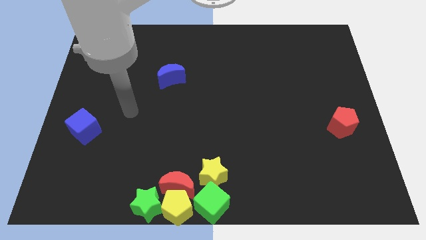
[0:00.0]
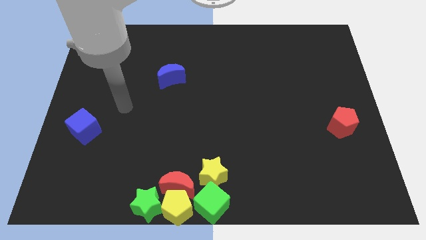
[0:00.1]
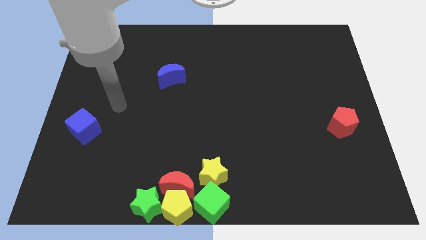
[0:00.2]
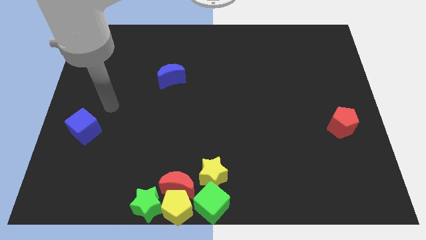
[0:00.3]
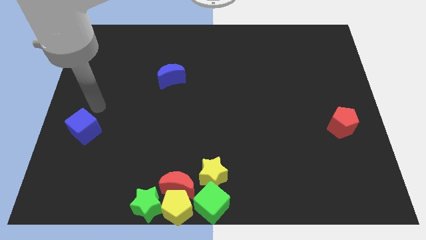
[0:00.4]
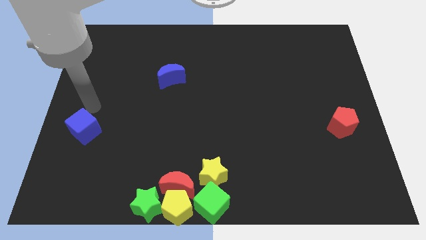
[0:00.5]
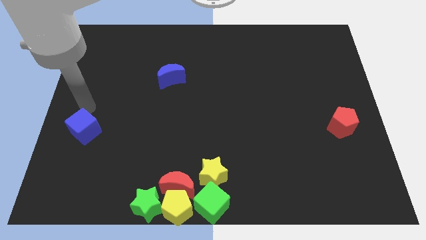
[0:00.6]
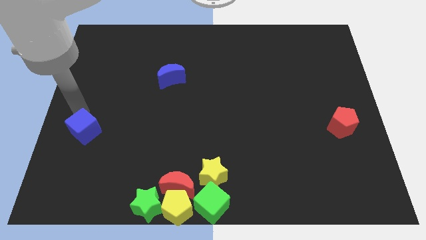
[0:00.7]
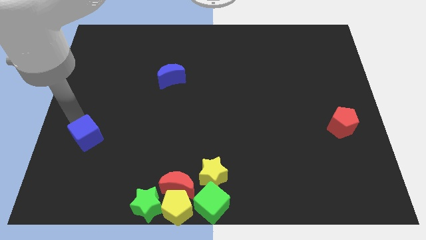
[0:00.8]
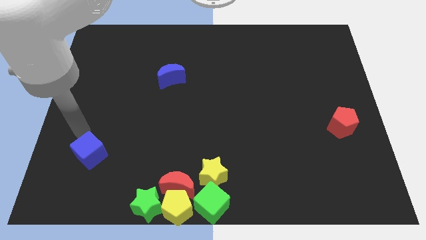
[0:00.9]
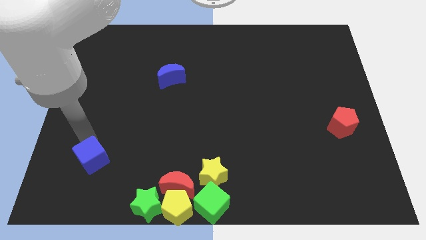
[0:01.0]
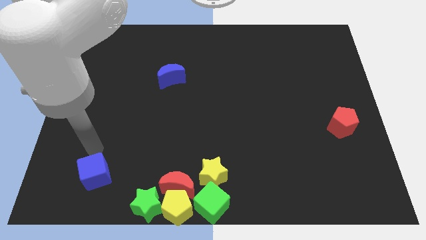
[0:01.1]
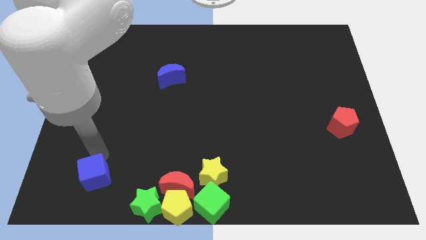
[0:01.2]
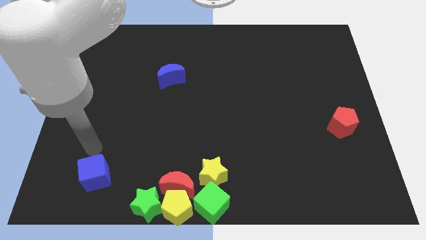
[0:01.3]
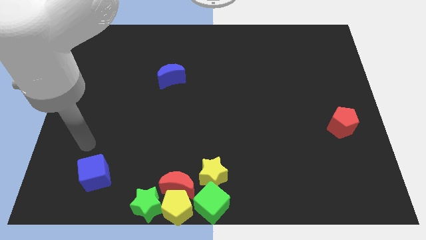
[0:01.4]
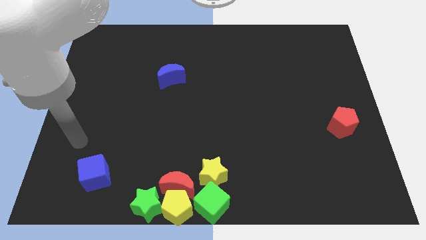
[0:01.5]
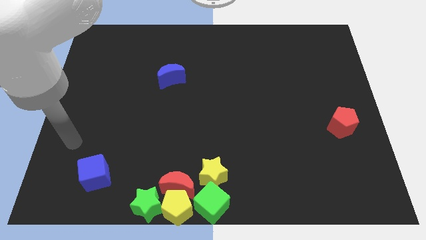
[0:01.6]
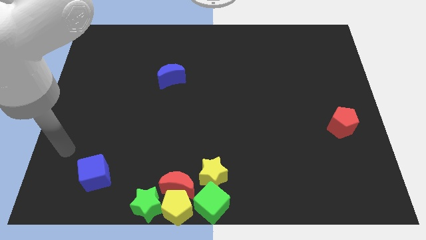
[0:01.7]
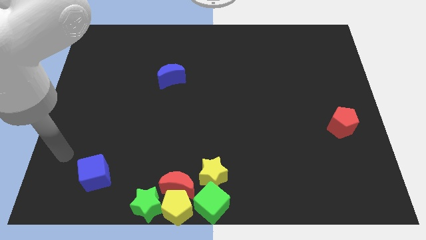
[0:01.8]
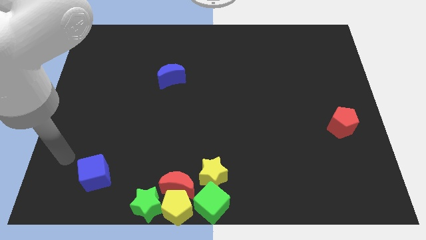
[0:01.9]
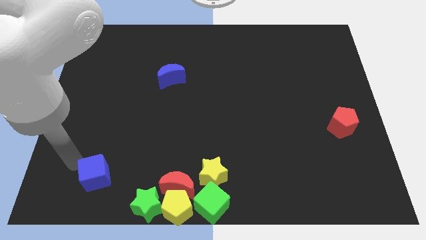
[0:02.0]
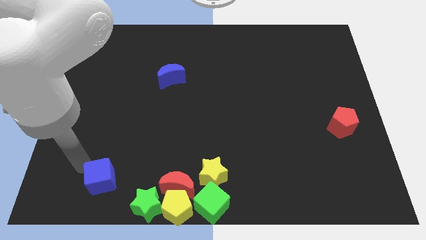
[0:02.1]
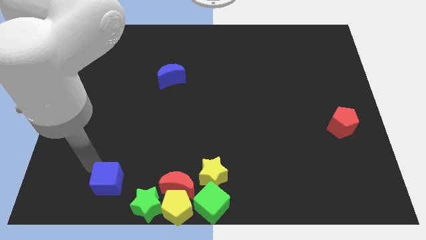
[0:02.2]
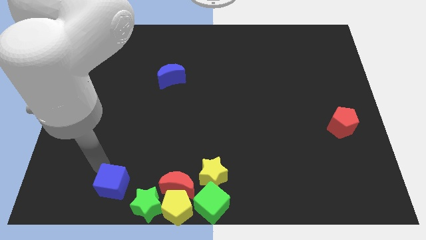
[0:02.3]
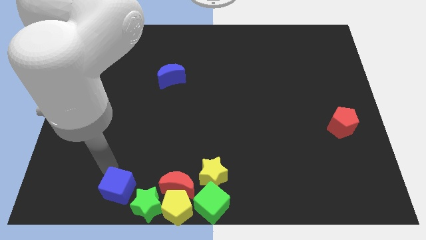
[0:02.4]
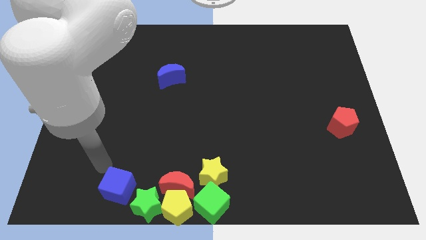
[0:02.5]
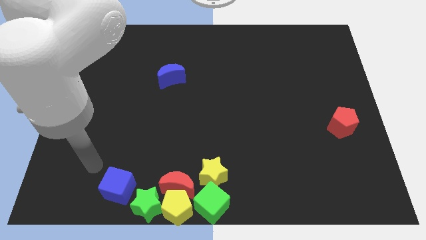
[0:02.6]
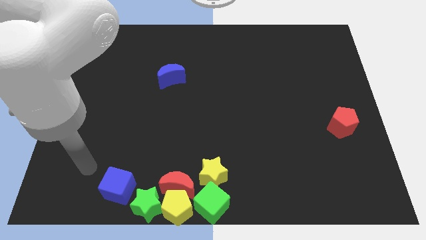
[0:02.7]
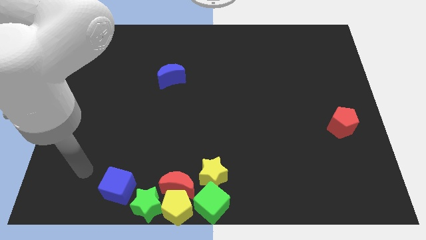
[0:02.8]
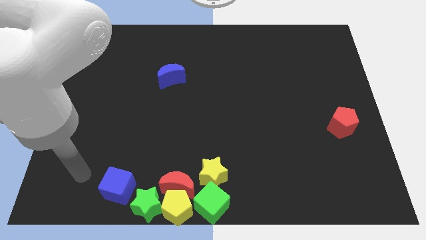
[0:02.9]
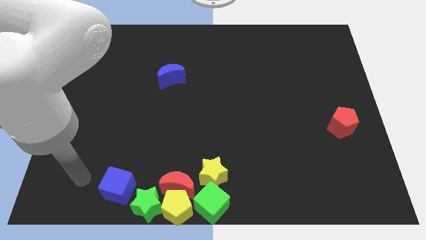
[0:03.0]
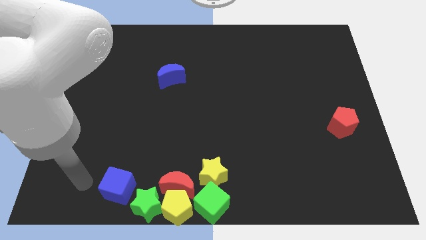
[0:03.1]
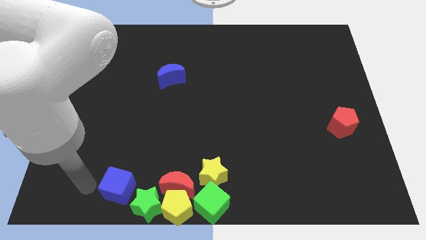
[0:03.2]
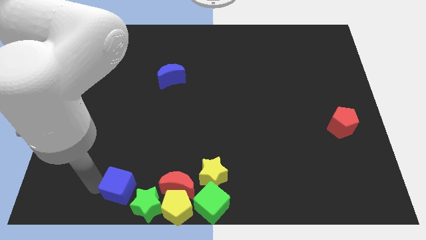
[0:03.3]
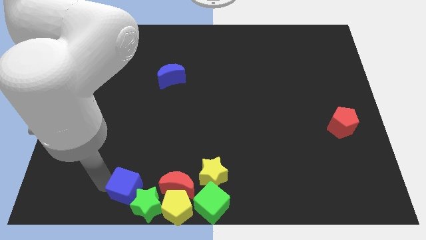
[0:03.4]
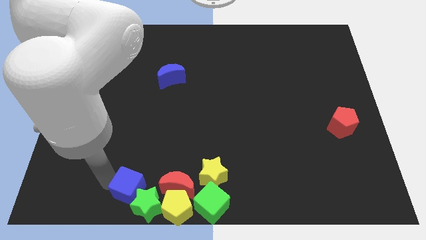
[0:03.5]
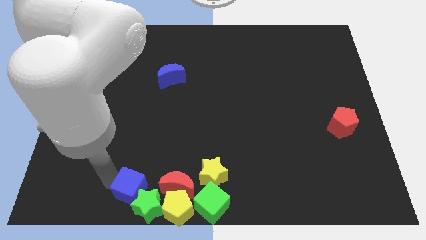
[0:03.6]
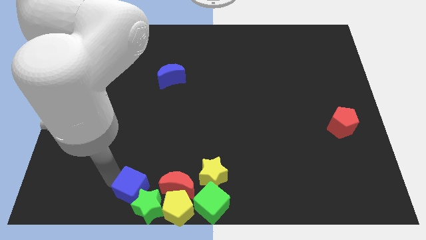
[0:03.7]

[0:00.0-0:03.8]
move the blue cube into the top left of the green star

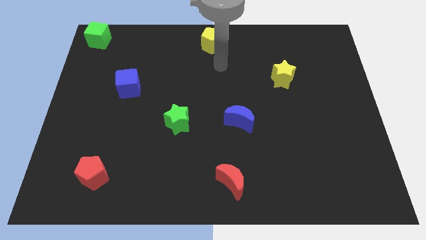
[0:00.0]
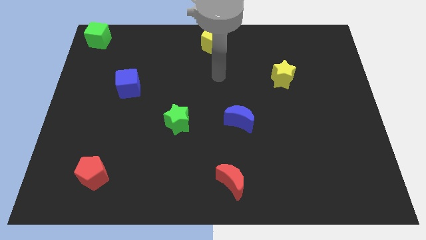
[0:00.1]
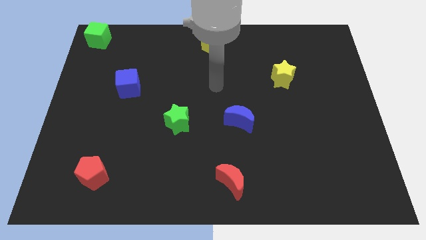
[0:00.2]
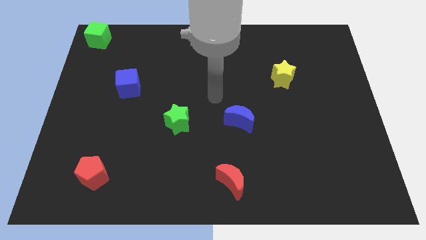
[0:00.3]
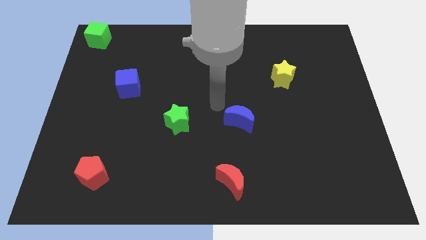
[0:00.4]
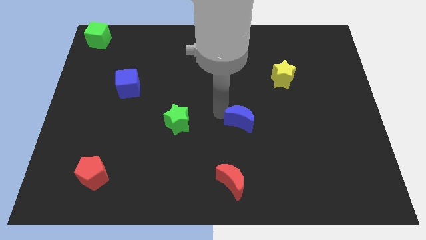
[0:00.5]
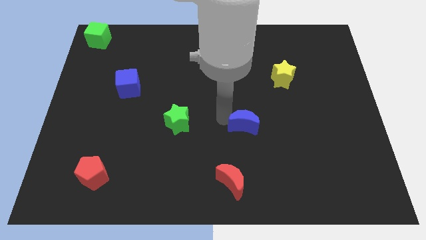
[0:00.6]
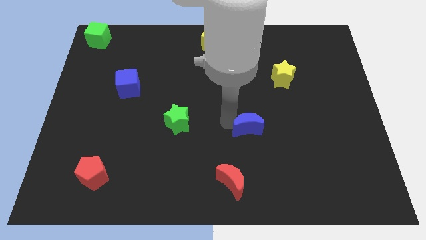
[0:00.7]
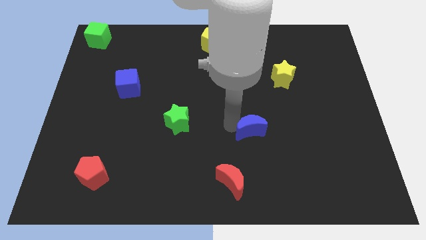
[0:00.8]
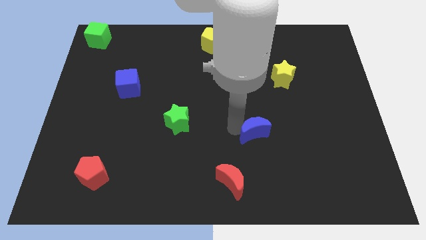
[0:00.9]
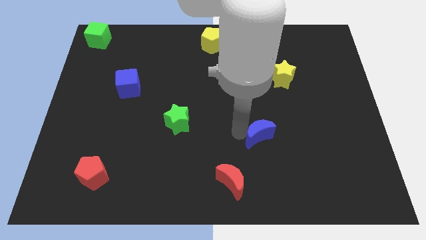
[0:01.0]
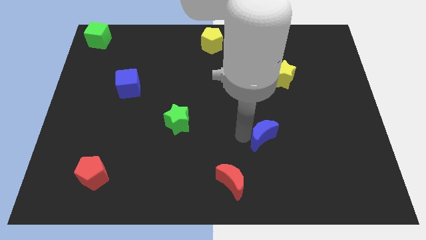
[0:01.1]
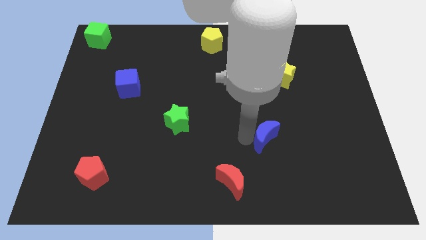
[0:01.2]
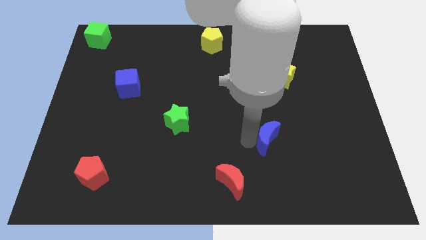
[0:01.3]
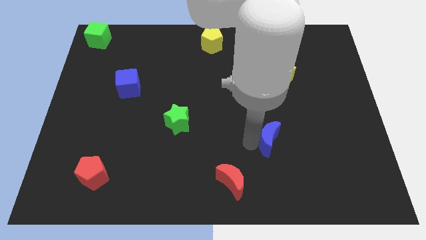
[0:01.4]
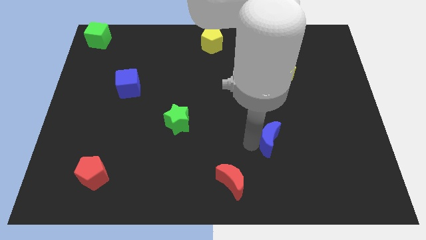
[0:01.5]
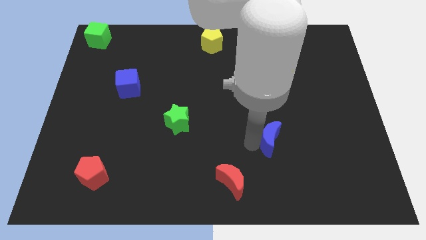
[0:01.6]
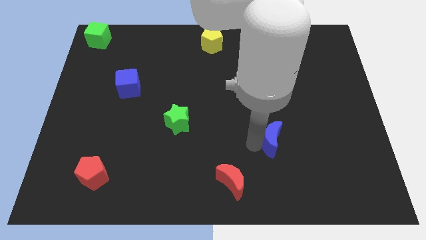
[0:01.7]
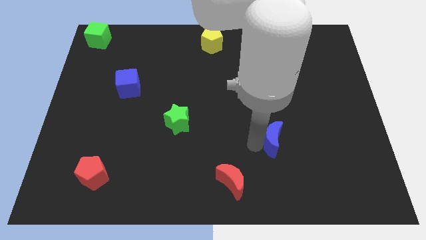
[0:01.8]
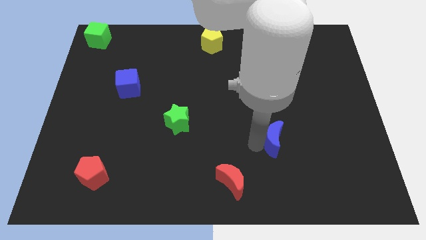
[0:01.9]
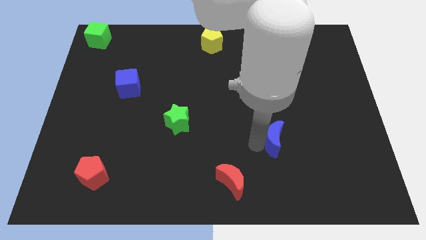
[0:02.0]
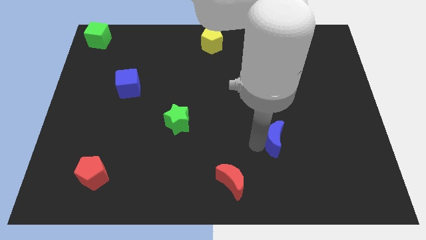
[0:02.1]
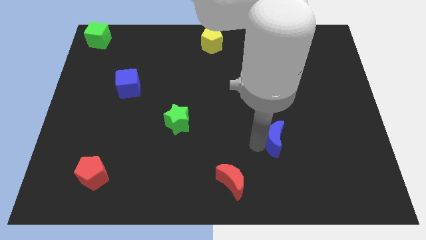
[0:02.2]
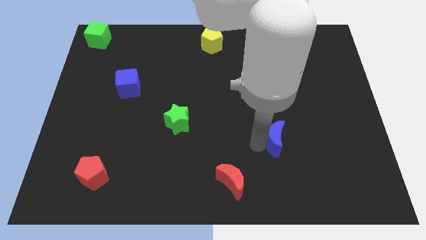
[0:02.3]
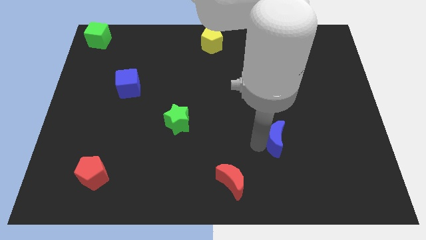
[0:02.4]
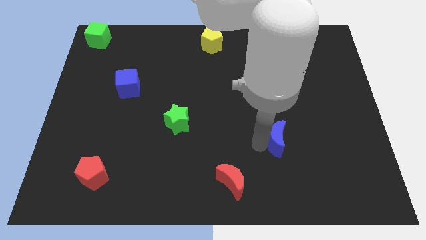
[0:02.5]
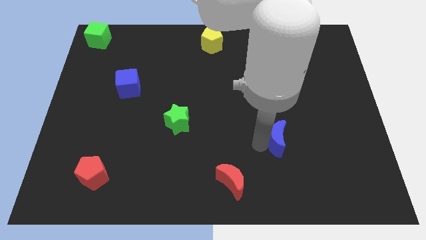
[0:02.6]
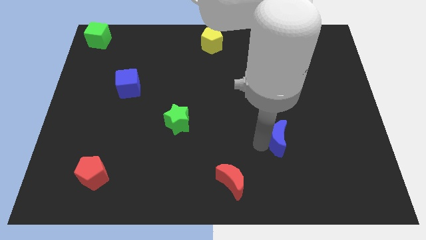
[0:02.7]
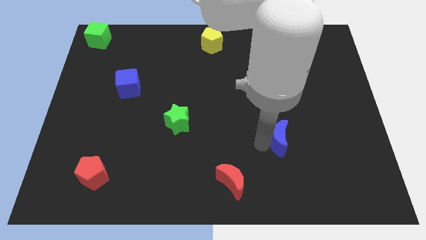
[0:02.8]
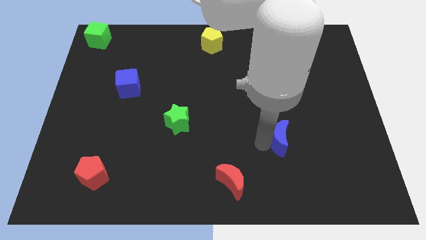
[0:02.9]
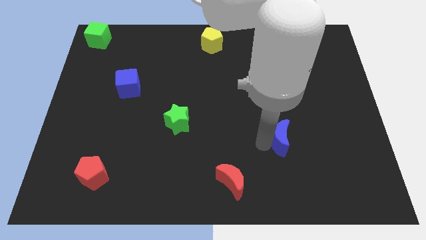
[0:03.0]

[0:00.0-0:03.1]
slide blue moon to the top right red moon

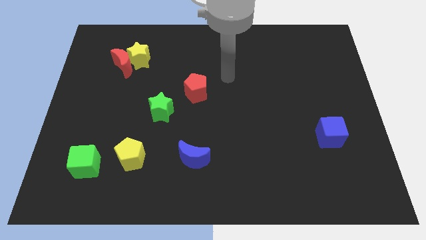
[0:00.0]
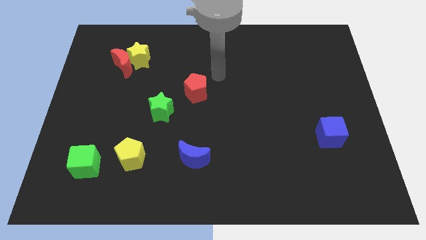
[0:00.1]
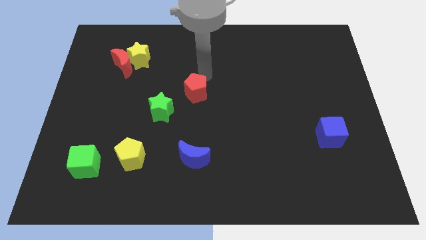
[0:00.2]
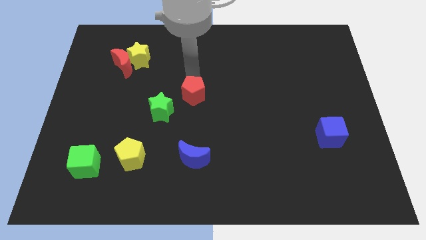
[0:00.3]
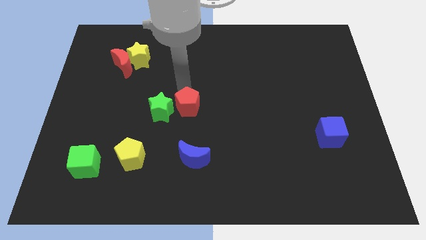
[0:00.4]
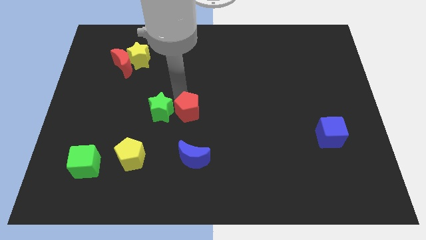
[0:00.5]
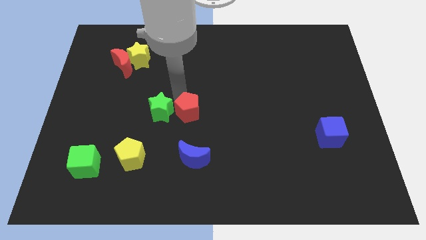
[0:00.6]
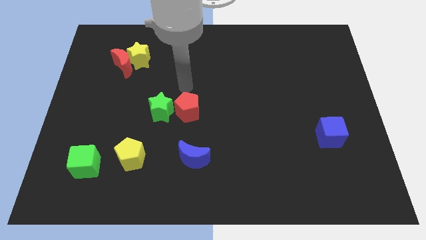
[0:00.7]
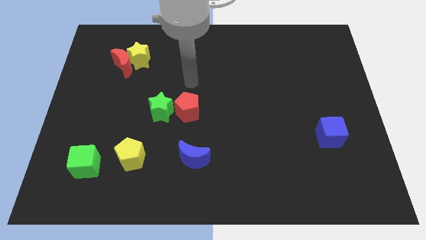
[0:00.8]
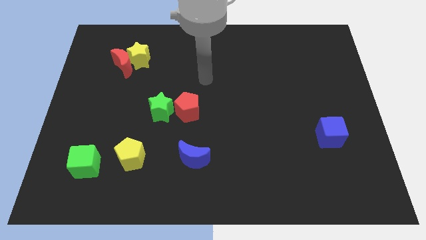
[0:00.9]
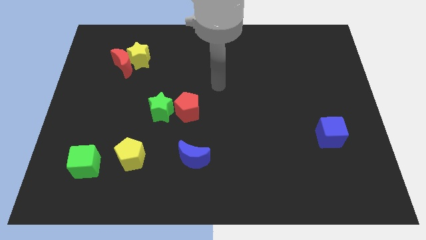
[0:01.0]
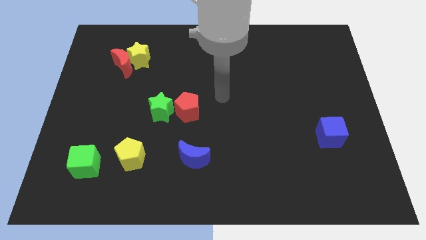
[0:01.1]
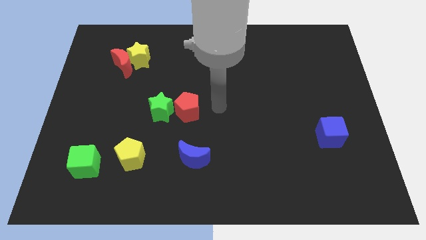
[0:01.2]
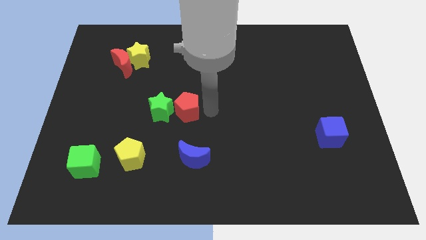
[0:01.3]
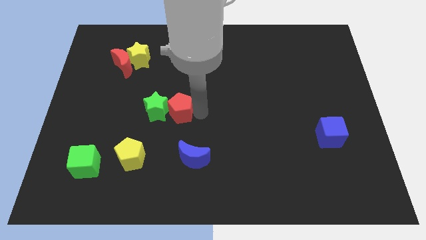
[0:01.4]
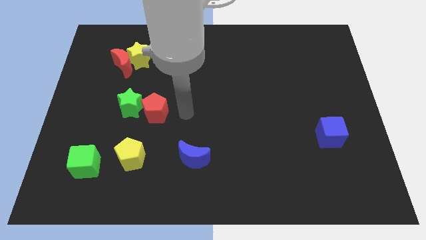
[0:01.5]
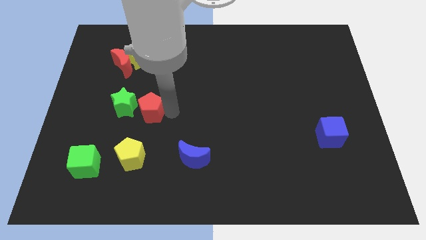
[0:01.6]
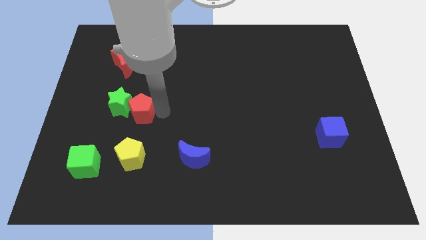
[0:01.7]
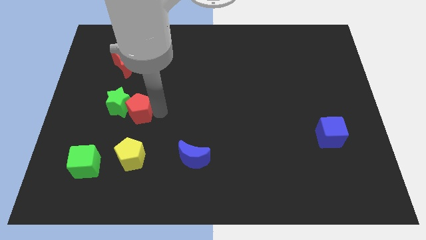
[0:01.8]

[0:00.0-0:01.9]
push the green star with the help of the red pentagon towards the left center of the board

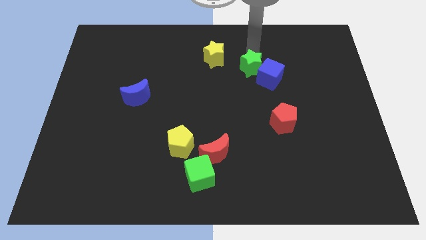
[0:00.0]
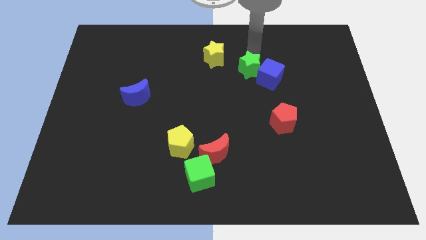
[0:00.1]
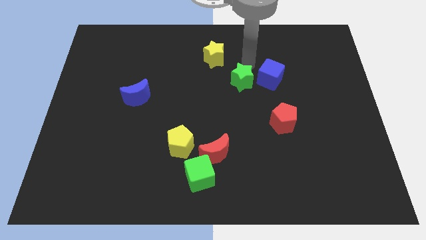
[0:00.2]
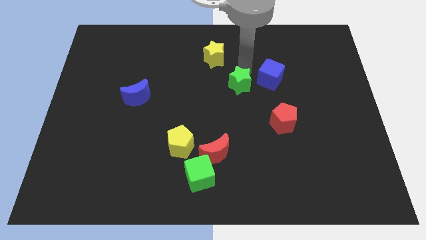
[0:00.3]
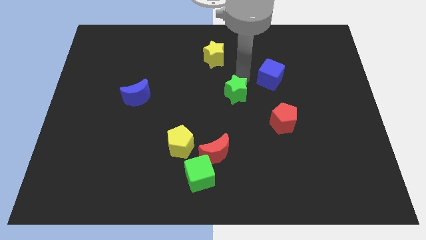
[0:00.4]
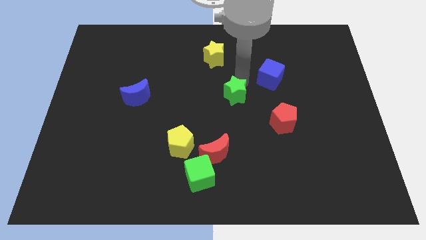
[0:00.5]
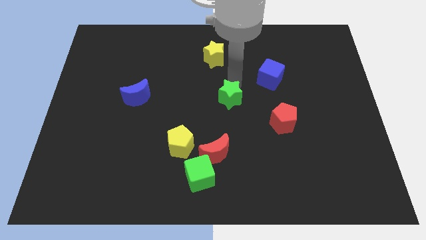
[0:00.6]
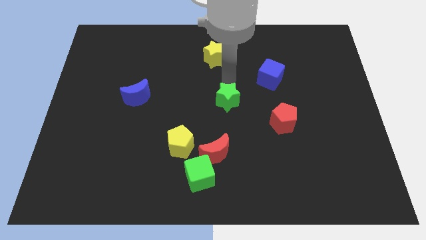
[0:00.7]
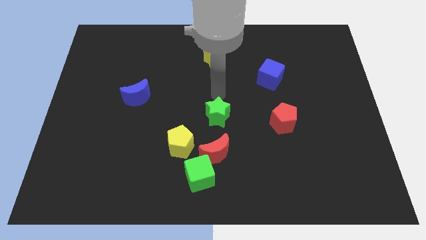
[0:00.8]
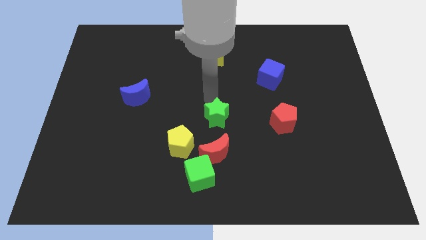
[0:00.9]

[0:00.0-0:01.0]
separate green star from blue cube
